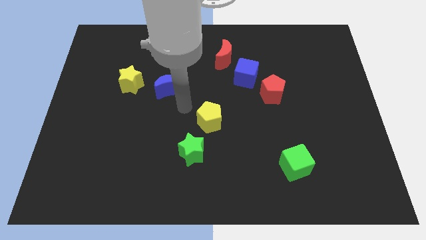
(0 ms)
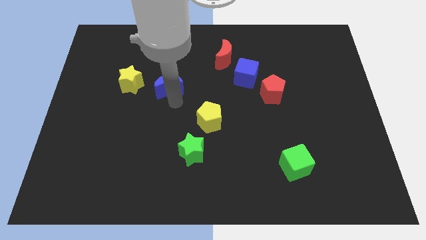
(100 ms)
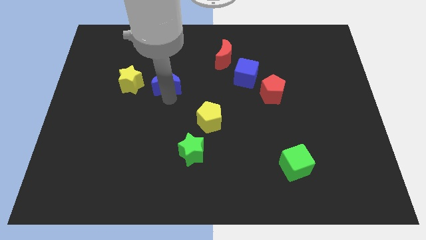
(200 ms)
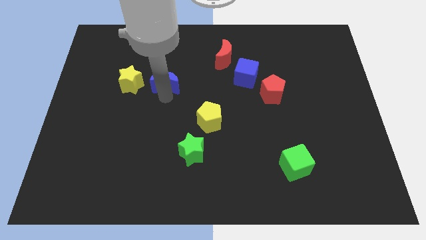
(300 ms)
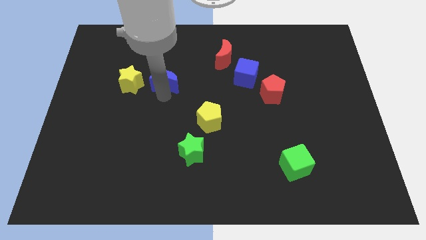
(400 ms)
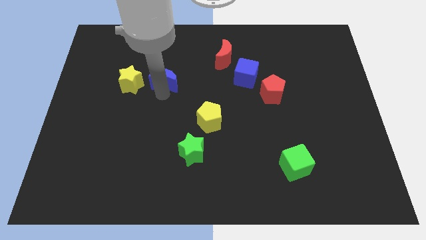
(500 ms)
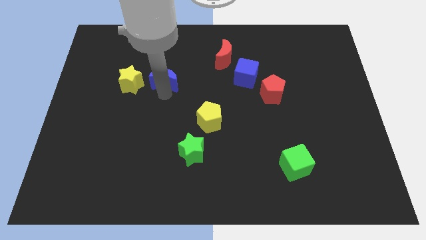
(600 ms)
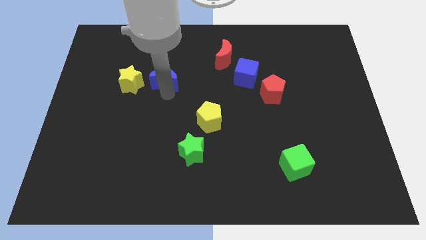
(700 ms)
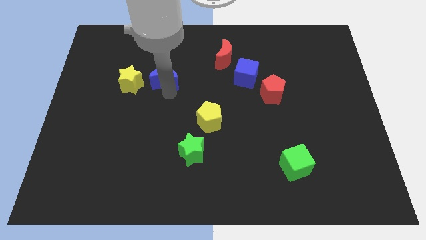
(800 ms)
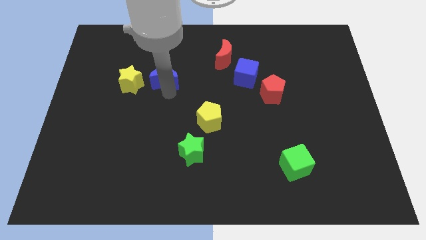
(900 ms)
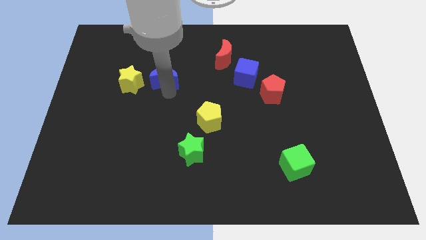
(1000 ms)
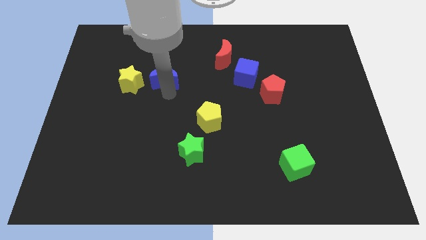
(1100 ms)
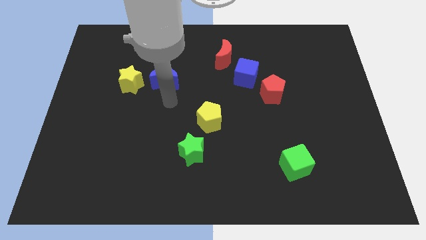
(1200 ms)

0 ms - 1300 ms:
move the blue crescent towards the right of the yellow star

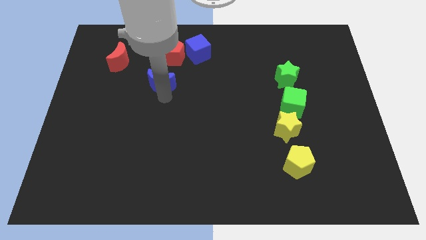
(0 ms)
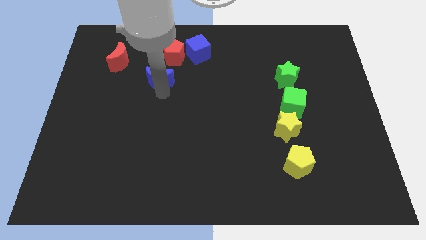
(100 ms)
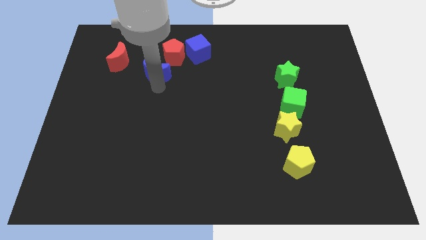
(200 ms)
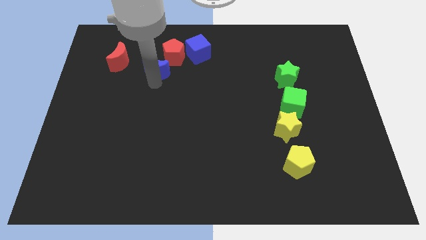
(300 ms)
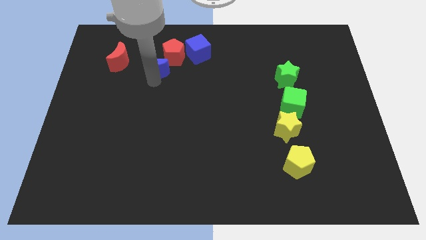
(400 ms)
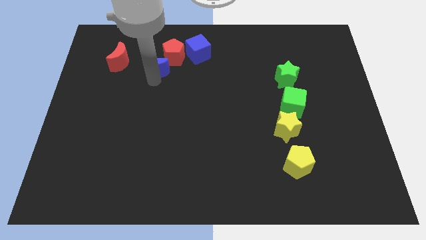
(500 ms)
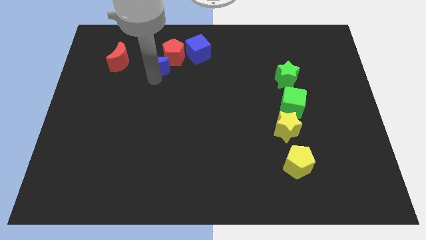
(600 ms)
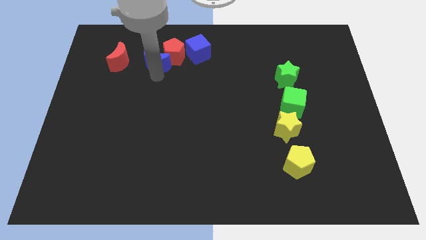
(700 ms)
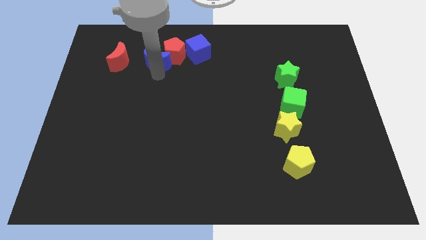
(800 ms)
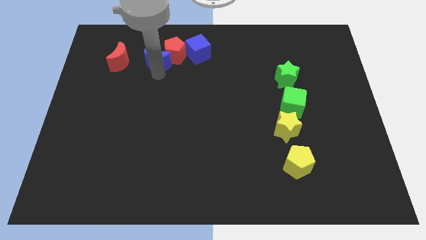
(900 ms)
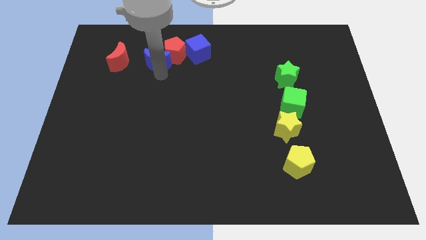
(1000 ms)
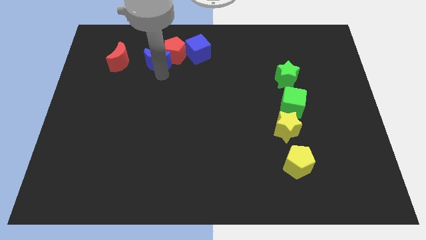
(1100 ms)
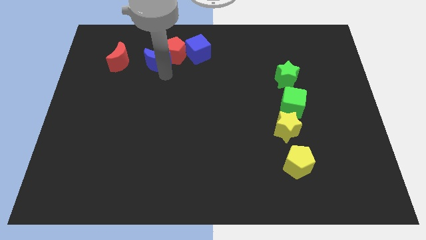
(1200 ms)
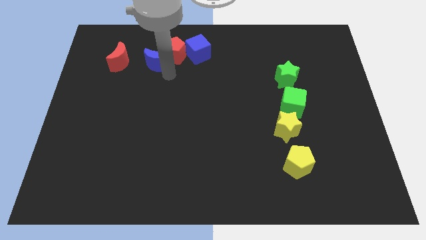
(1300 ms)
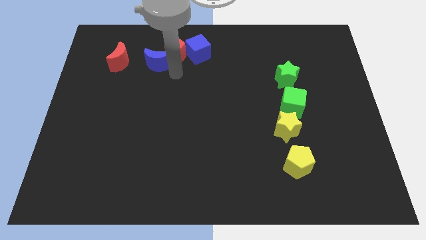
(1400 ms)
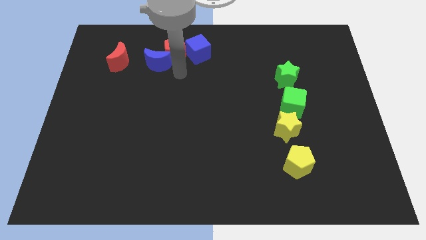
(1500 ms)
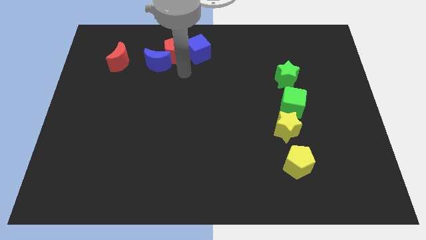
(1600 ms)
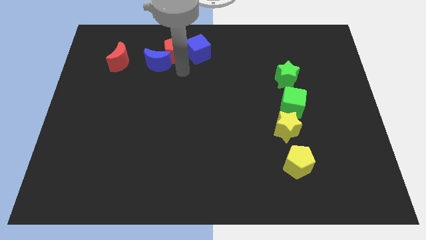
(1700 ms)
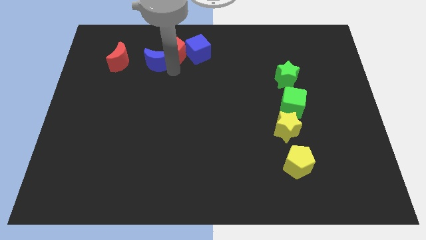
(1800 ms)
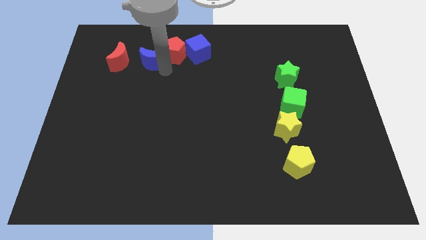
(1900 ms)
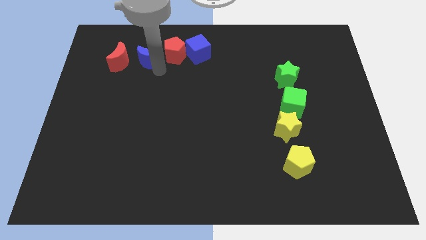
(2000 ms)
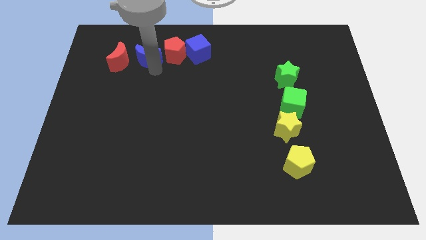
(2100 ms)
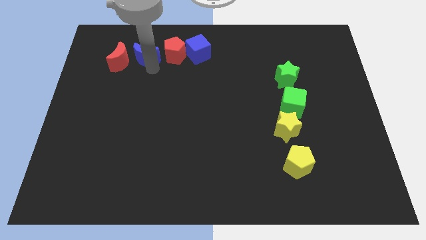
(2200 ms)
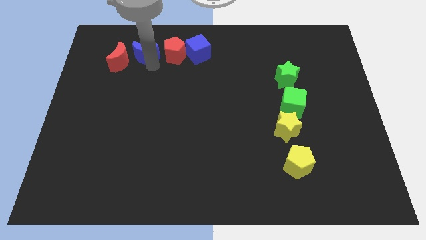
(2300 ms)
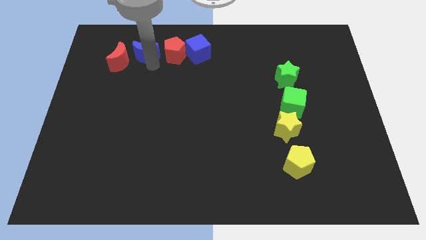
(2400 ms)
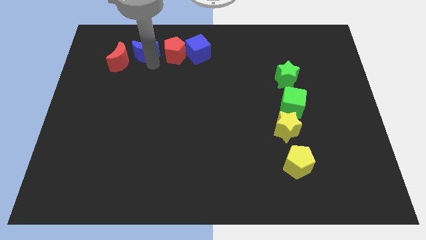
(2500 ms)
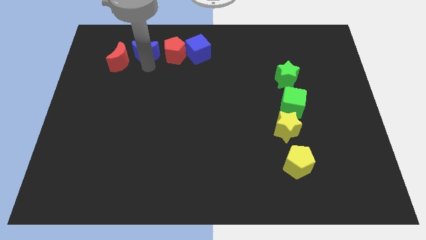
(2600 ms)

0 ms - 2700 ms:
place the blue moon in between the red blocks

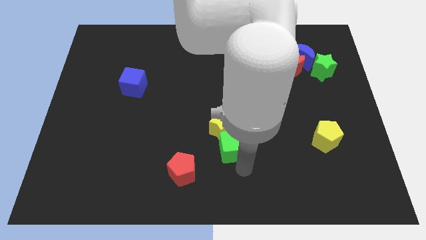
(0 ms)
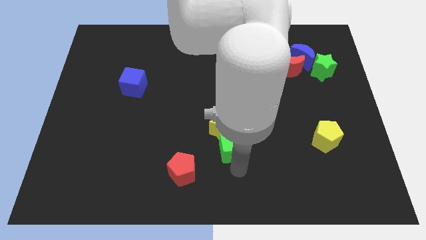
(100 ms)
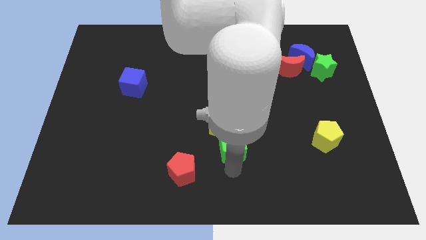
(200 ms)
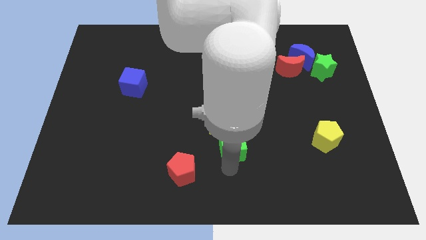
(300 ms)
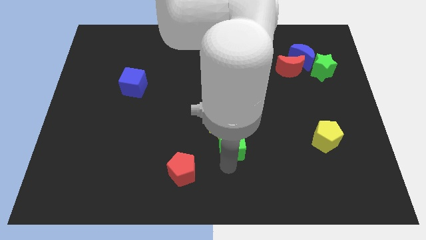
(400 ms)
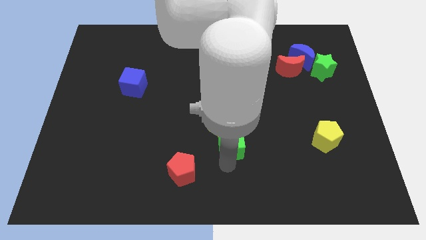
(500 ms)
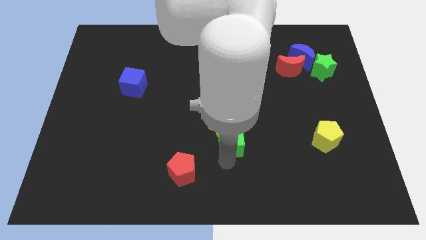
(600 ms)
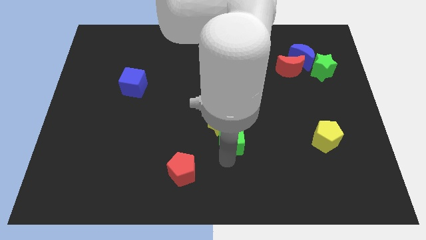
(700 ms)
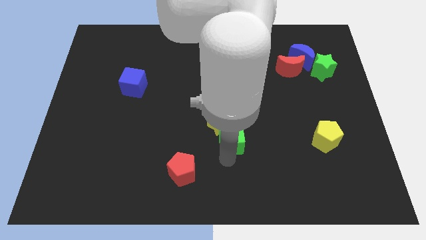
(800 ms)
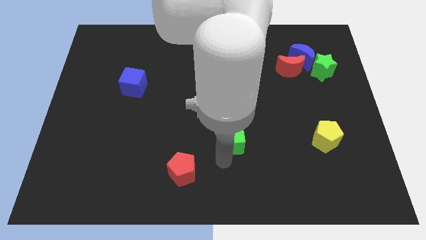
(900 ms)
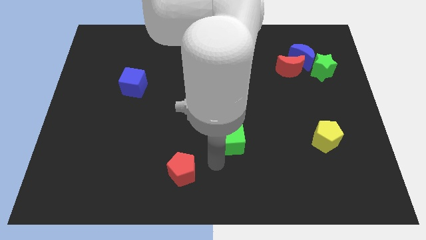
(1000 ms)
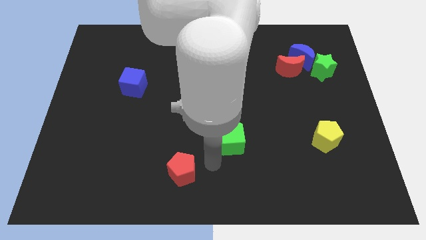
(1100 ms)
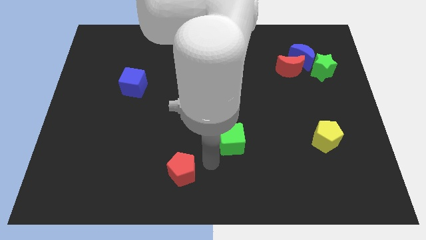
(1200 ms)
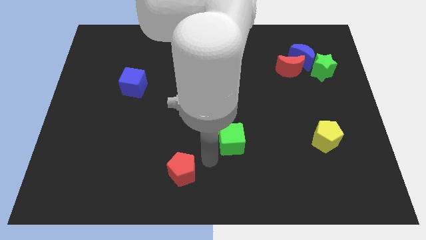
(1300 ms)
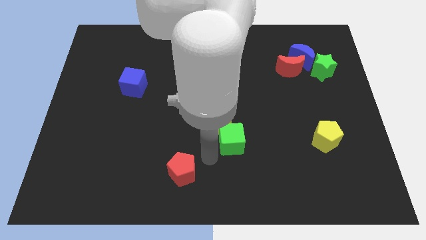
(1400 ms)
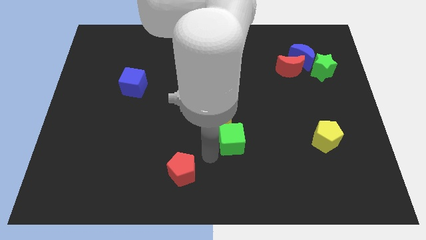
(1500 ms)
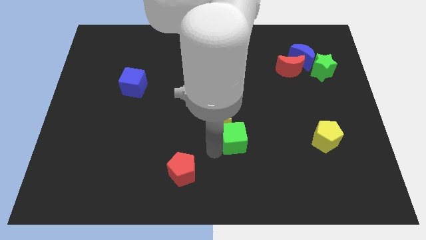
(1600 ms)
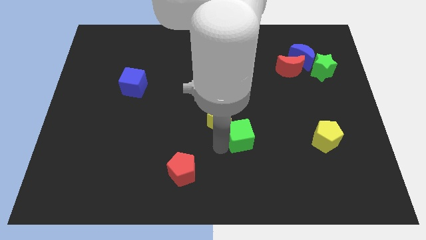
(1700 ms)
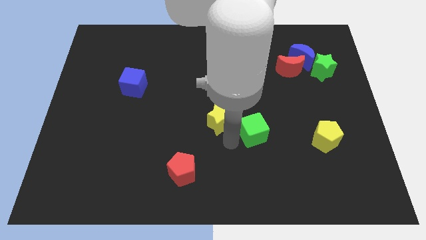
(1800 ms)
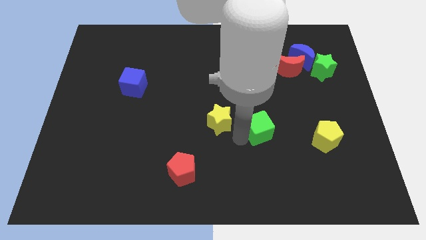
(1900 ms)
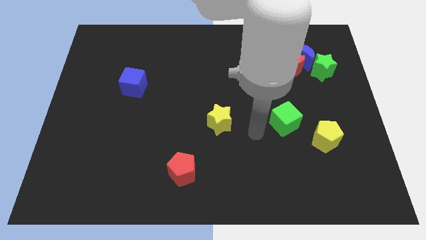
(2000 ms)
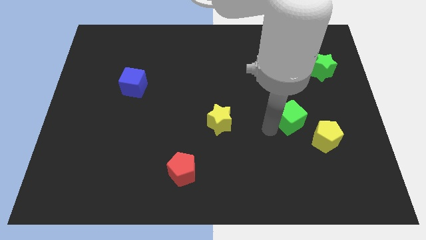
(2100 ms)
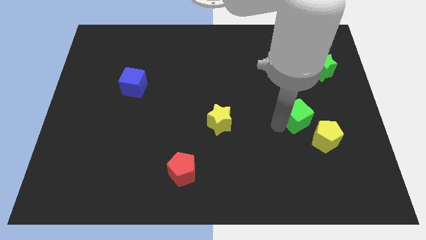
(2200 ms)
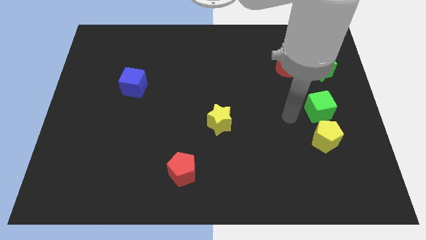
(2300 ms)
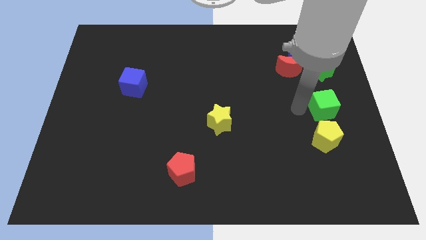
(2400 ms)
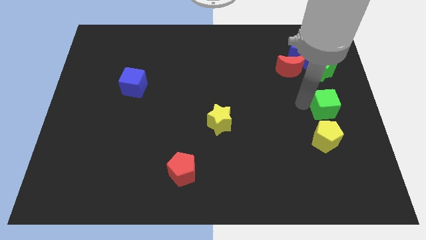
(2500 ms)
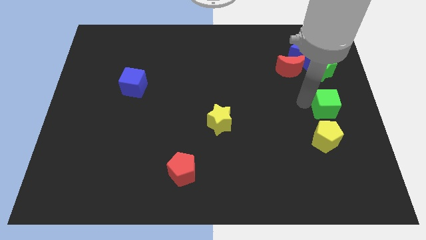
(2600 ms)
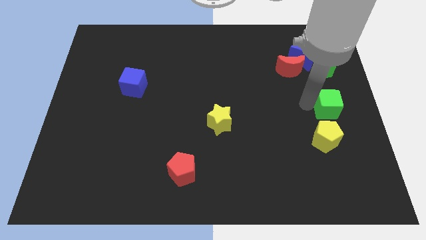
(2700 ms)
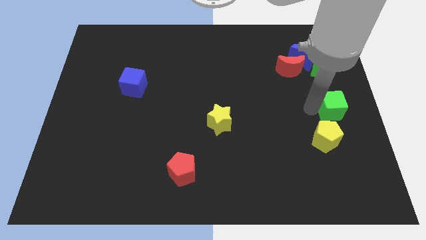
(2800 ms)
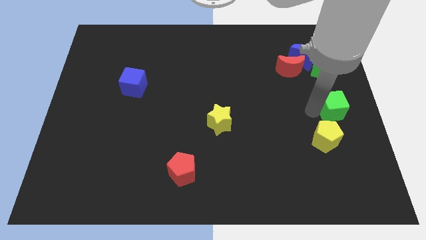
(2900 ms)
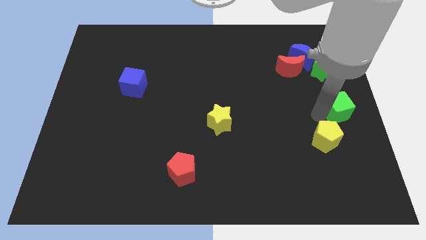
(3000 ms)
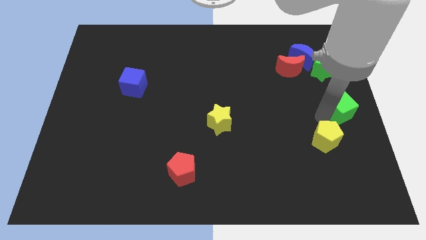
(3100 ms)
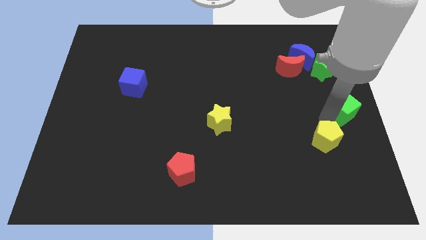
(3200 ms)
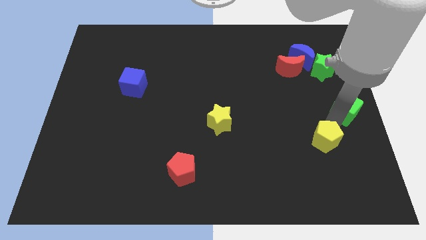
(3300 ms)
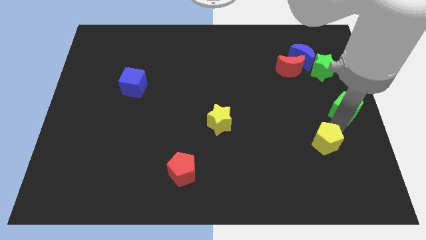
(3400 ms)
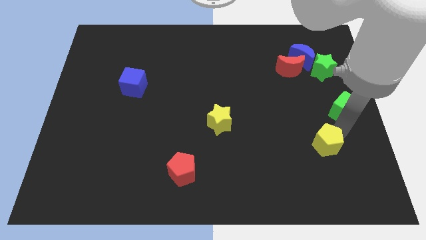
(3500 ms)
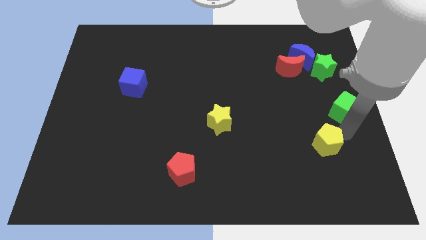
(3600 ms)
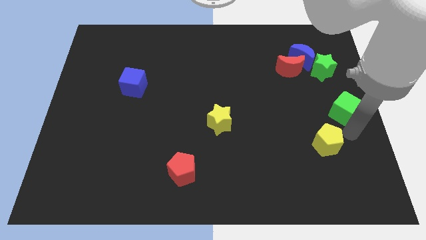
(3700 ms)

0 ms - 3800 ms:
move green cube to the top right side of yellow pentagon

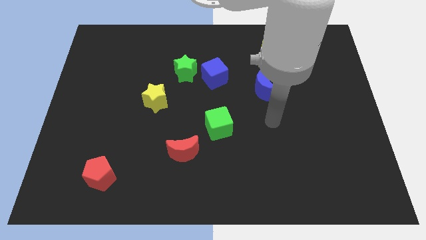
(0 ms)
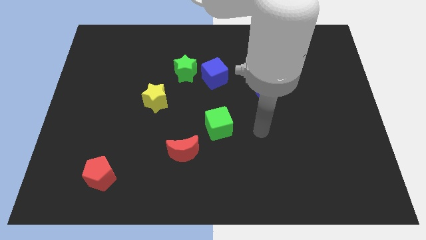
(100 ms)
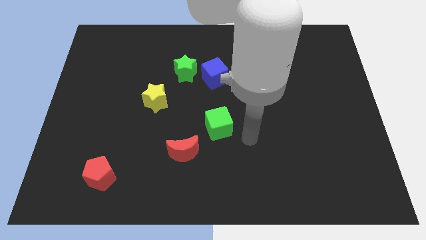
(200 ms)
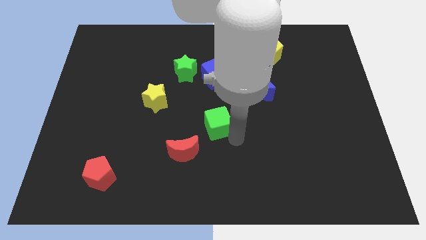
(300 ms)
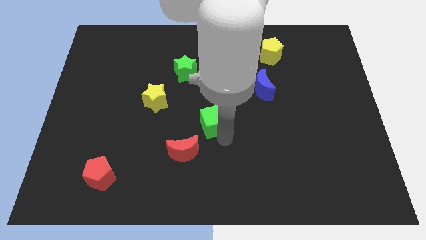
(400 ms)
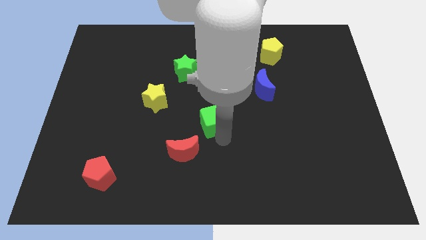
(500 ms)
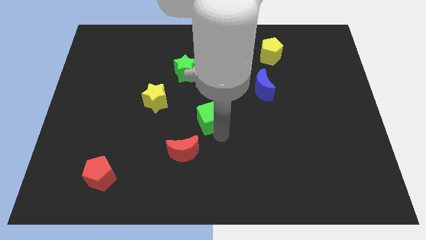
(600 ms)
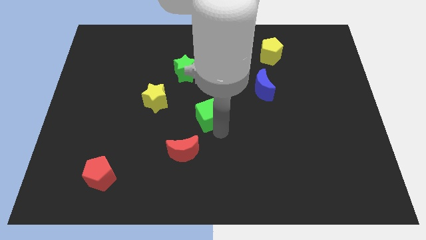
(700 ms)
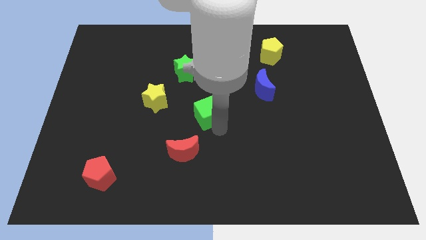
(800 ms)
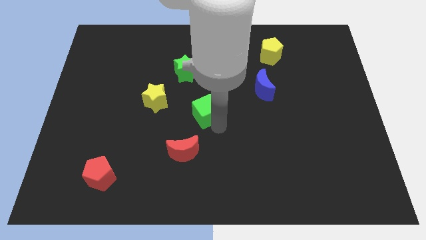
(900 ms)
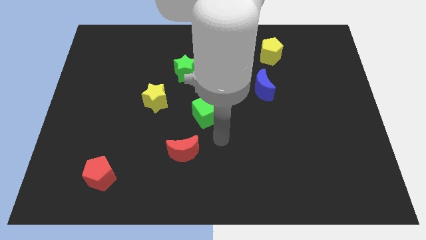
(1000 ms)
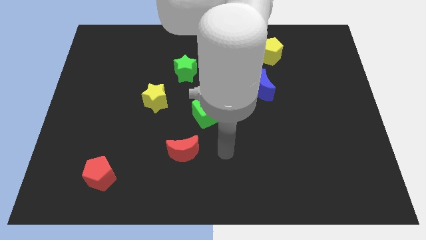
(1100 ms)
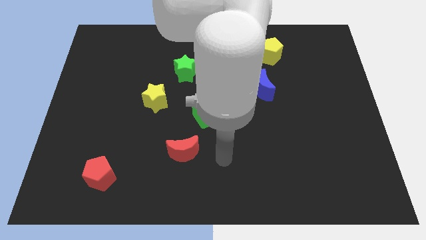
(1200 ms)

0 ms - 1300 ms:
push the green cube towards green star
